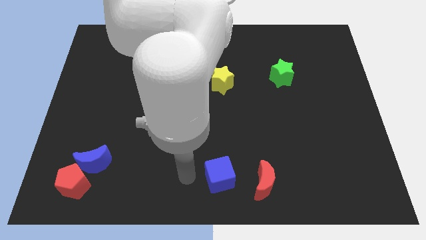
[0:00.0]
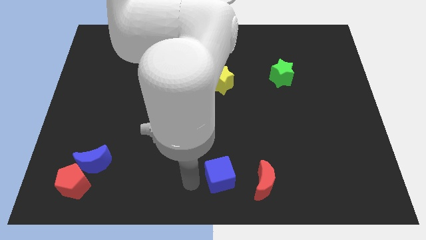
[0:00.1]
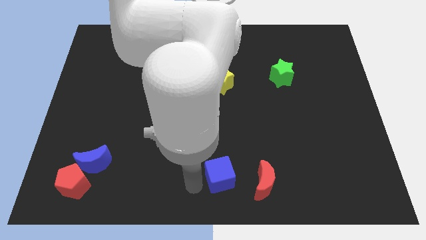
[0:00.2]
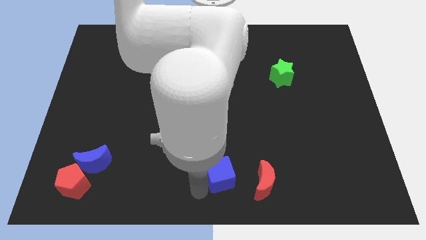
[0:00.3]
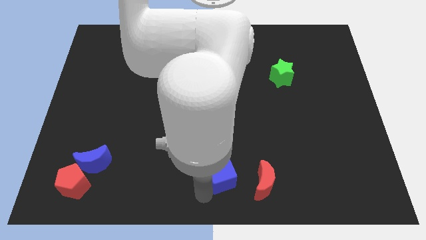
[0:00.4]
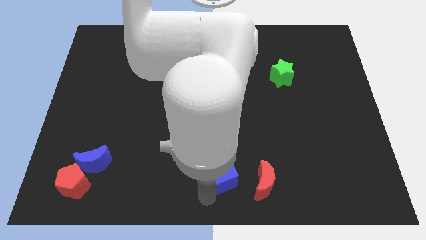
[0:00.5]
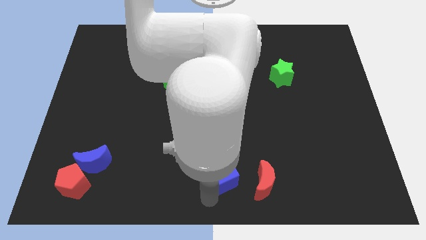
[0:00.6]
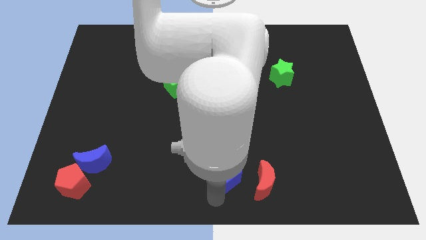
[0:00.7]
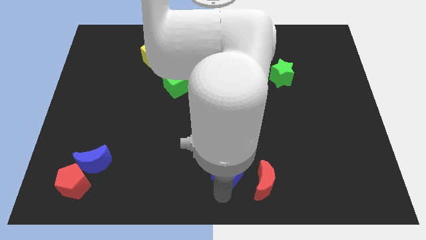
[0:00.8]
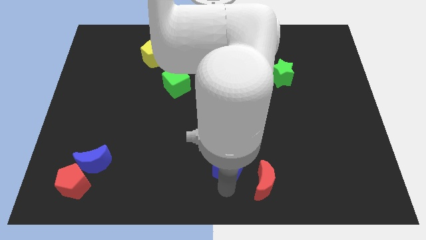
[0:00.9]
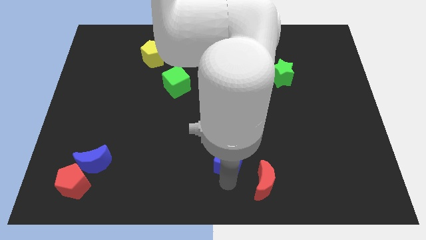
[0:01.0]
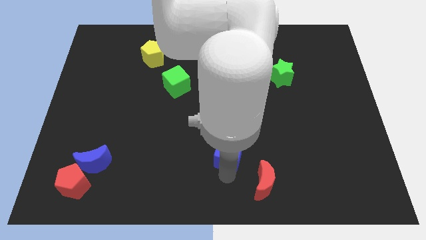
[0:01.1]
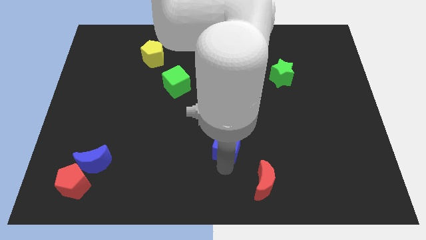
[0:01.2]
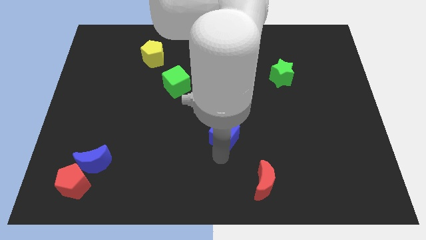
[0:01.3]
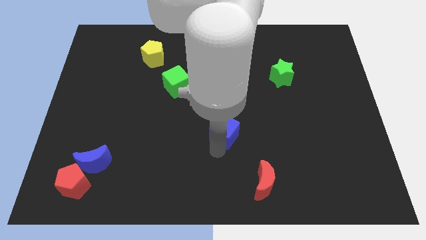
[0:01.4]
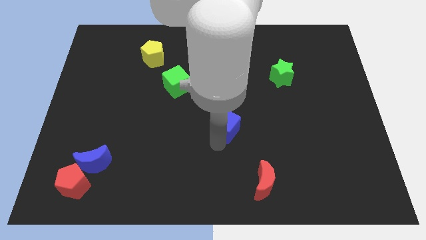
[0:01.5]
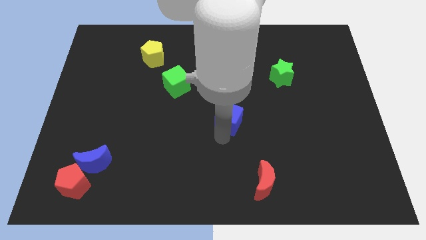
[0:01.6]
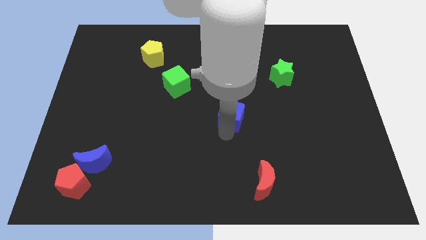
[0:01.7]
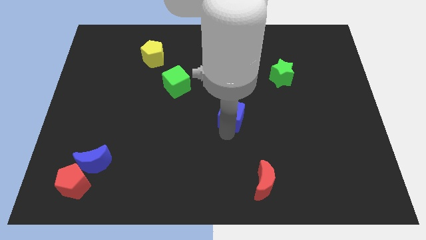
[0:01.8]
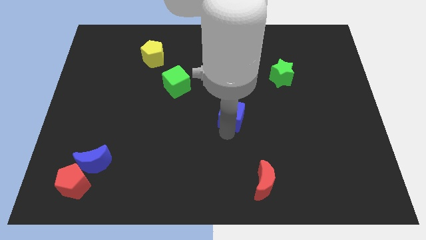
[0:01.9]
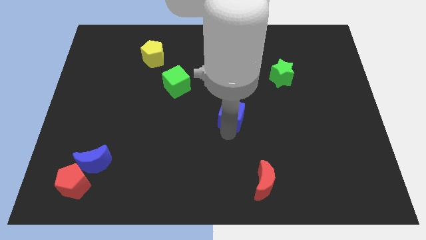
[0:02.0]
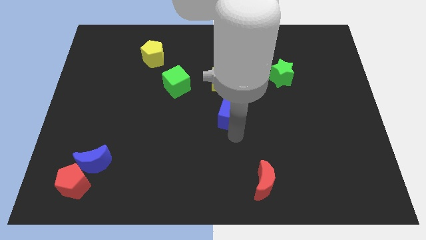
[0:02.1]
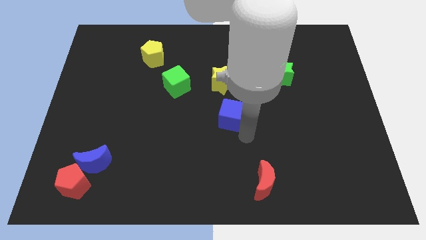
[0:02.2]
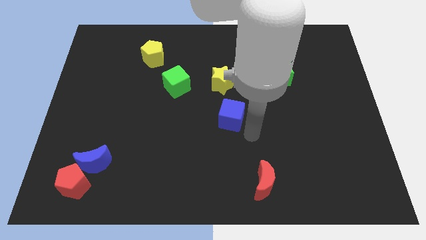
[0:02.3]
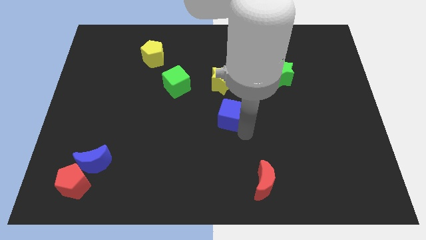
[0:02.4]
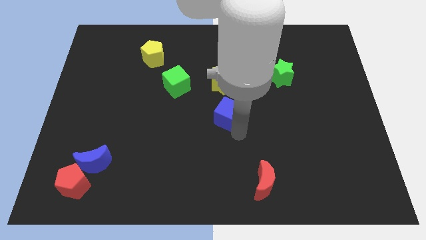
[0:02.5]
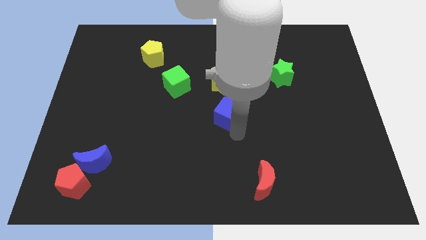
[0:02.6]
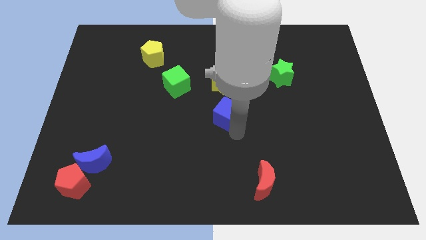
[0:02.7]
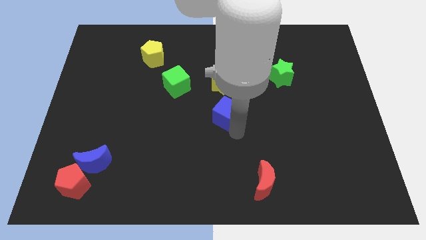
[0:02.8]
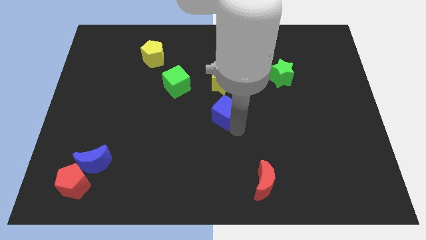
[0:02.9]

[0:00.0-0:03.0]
slide the blue cube to the bottom of the yellow star

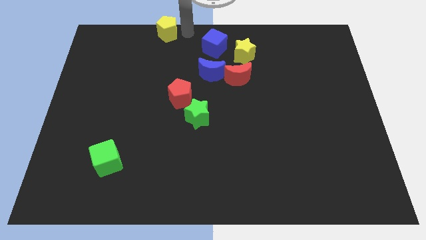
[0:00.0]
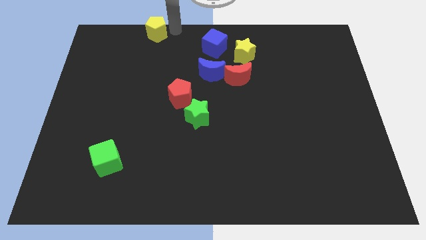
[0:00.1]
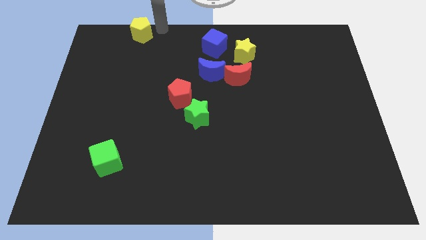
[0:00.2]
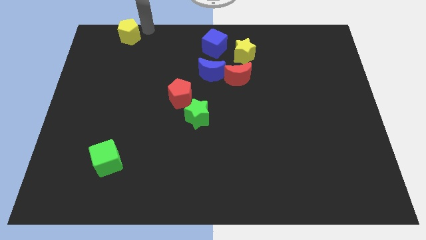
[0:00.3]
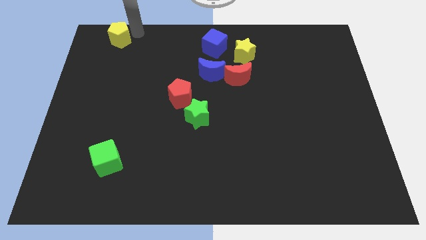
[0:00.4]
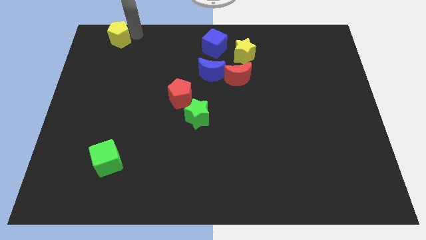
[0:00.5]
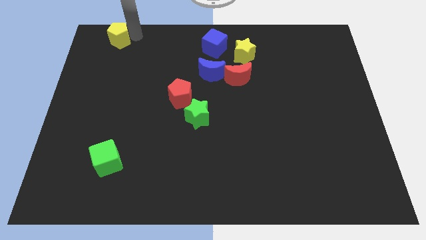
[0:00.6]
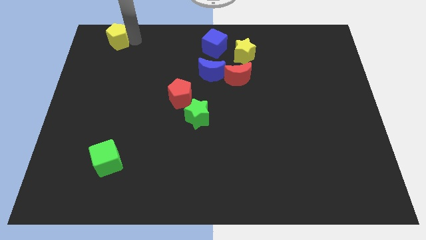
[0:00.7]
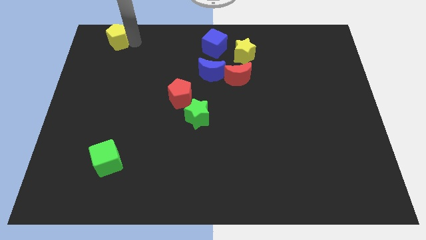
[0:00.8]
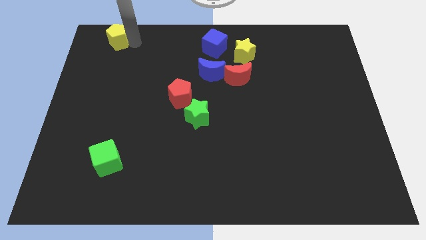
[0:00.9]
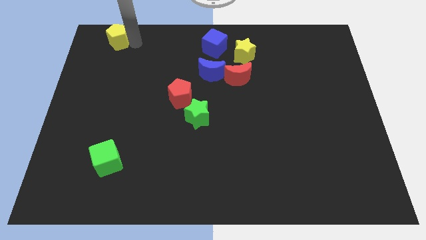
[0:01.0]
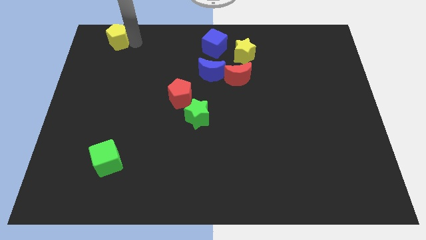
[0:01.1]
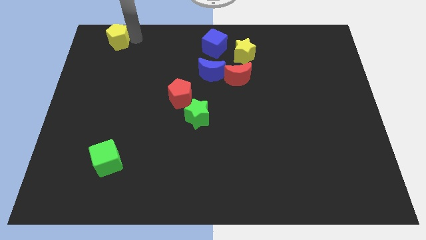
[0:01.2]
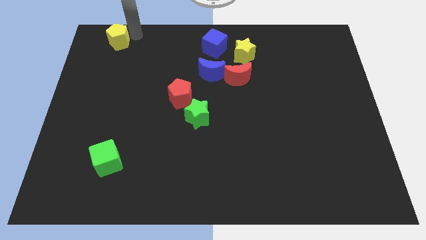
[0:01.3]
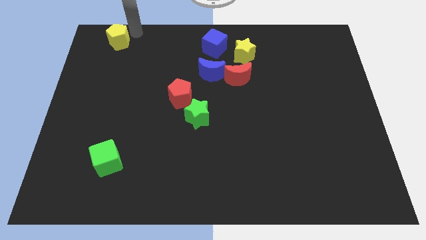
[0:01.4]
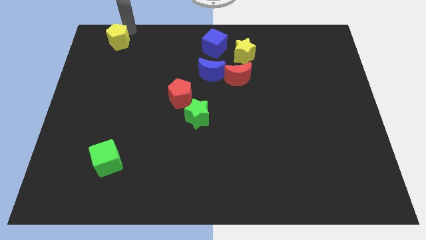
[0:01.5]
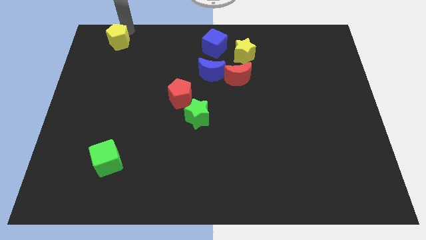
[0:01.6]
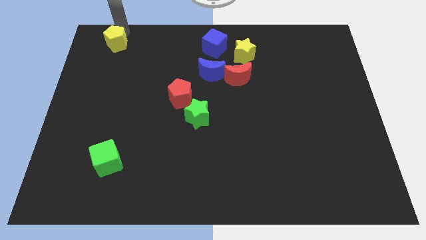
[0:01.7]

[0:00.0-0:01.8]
drag the yellow pentagon slightly to the left

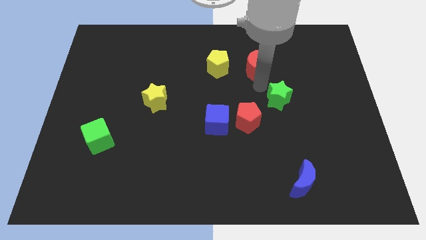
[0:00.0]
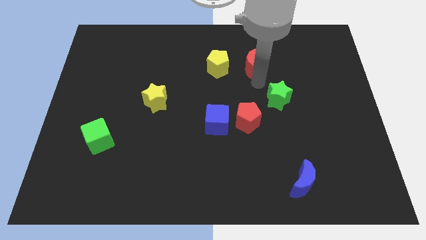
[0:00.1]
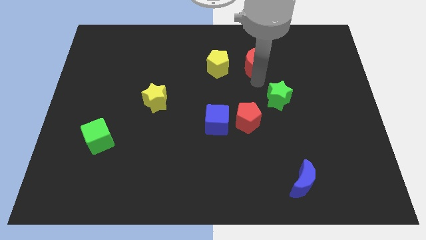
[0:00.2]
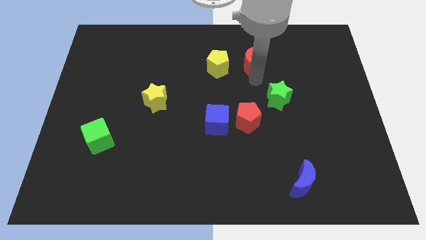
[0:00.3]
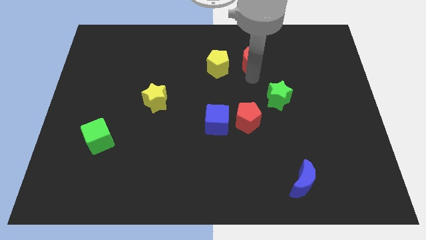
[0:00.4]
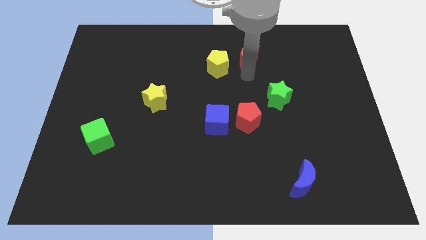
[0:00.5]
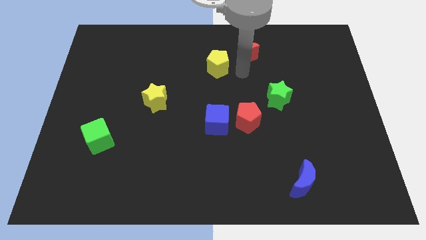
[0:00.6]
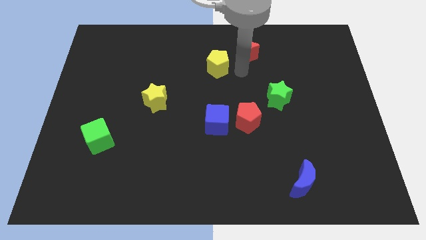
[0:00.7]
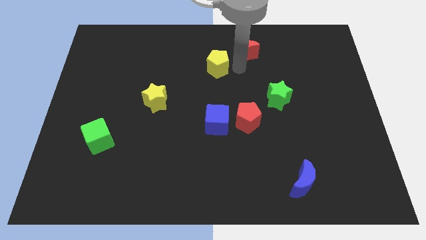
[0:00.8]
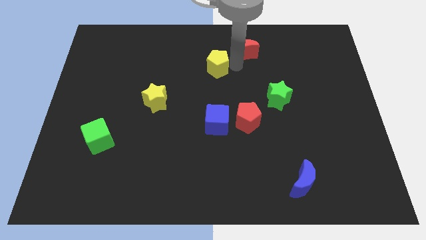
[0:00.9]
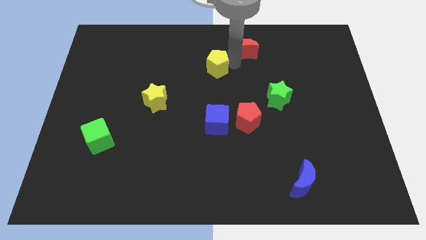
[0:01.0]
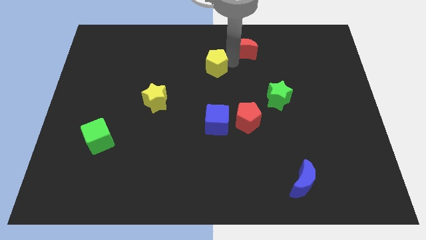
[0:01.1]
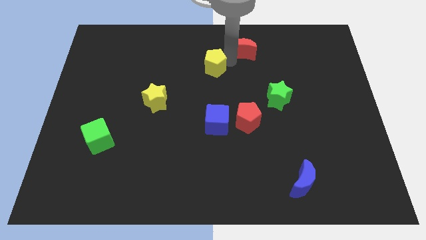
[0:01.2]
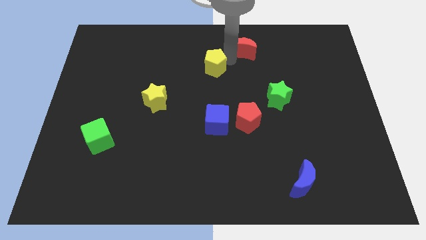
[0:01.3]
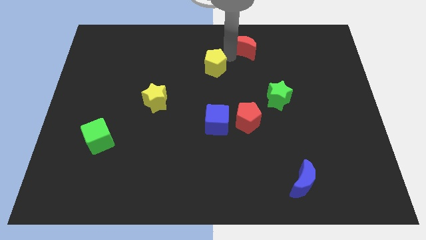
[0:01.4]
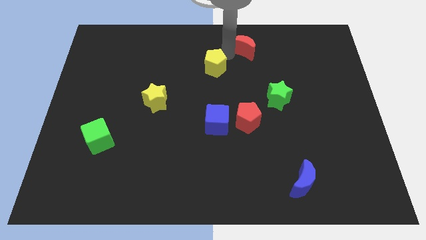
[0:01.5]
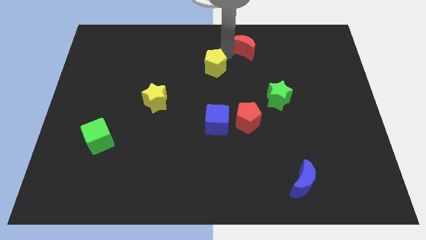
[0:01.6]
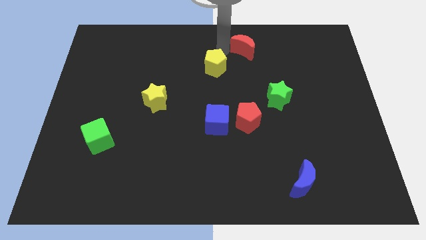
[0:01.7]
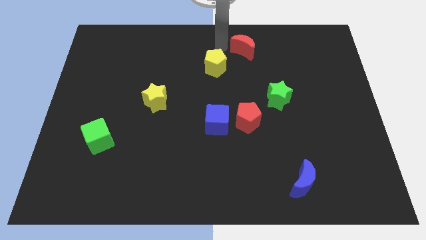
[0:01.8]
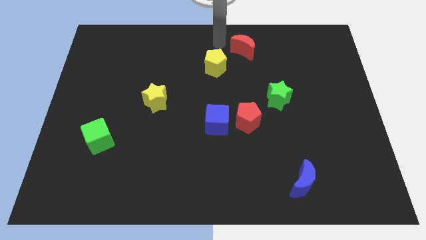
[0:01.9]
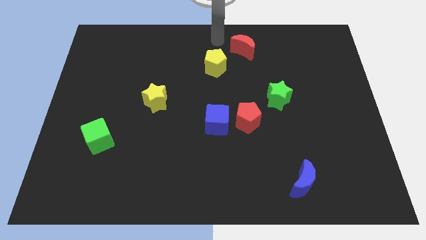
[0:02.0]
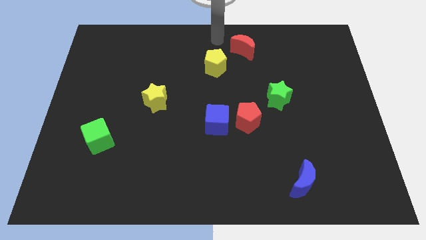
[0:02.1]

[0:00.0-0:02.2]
push red moon upwards

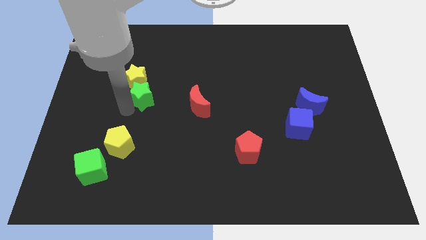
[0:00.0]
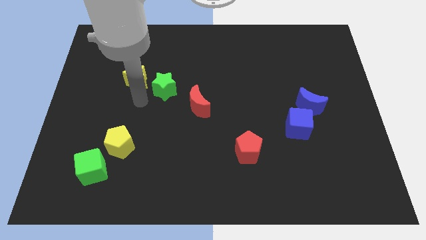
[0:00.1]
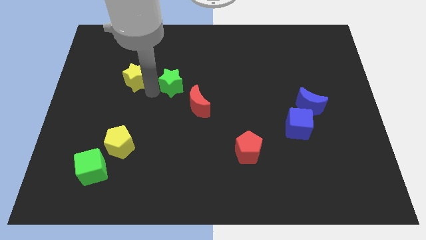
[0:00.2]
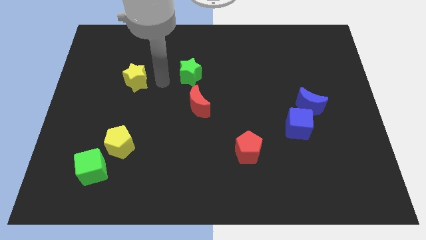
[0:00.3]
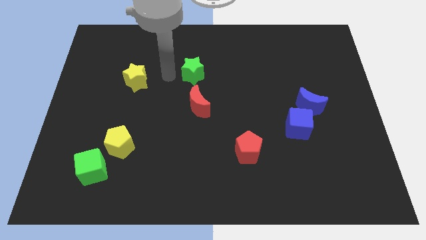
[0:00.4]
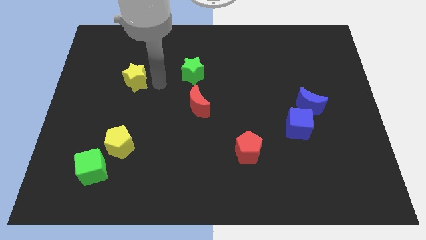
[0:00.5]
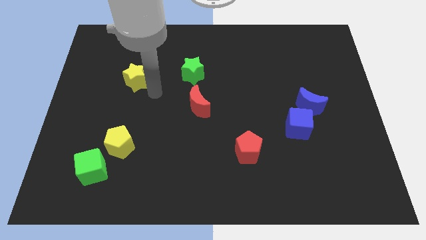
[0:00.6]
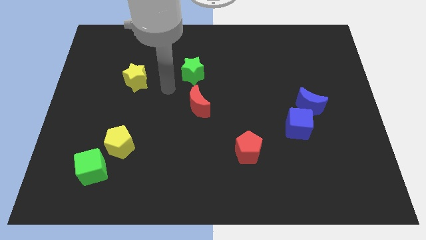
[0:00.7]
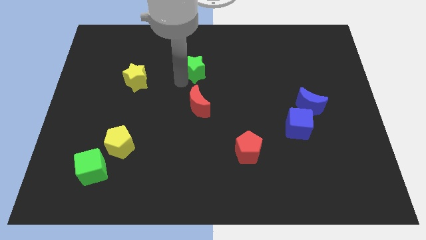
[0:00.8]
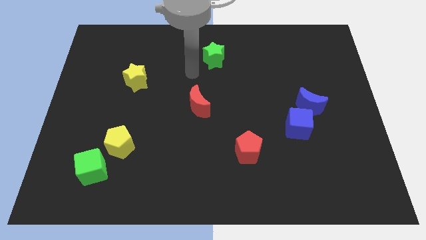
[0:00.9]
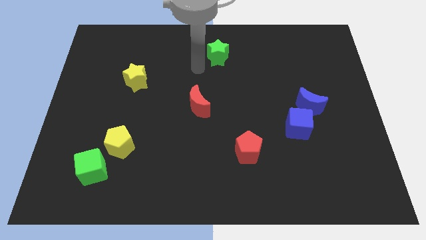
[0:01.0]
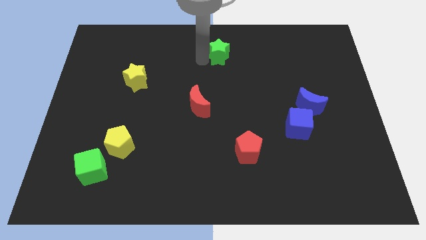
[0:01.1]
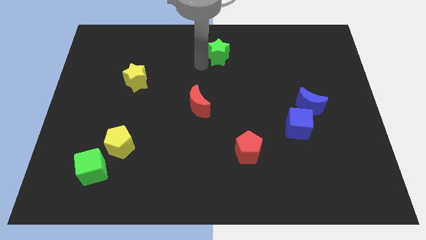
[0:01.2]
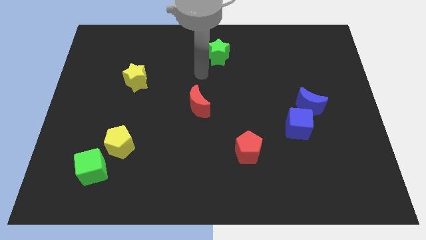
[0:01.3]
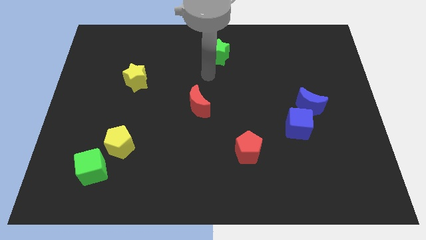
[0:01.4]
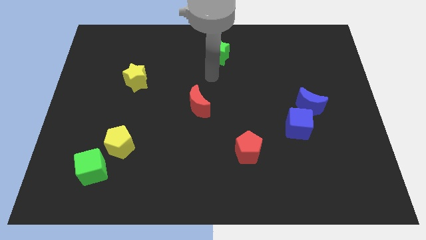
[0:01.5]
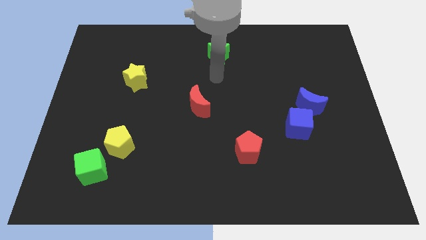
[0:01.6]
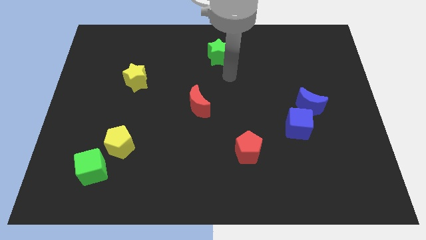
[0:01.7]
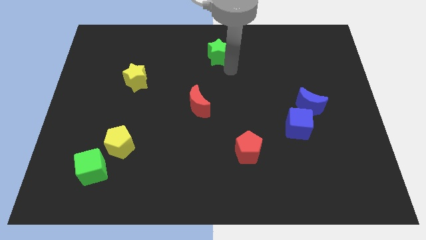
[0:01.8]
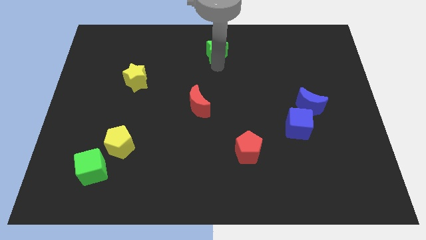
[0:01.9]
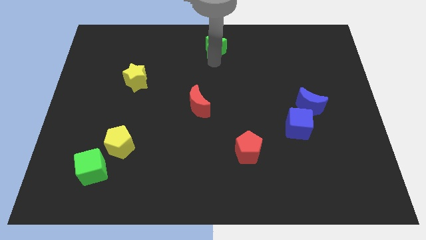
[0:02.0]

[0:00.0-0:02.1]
place the green star diagonally to blue moon
